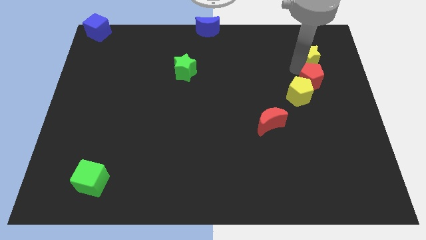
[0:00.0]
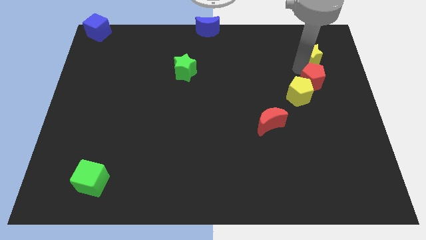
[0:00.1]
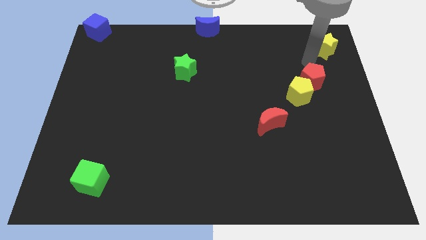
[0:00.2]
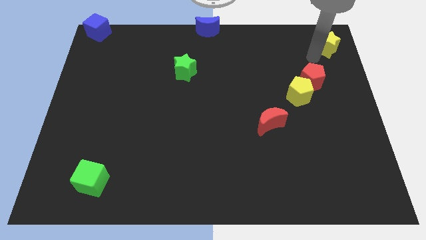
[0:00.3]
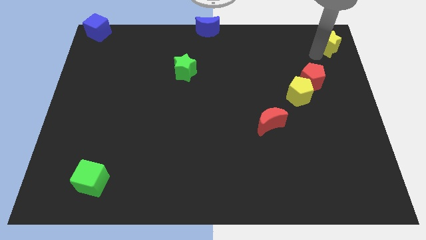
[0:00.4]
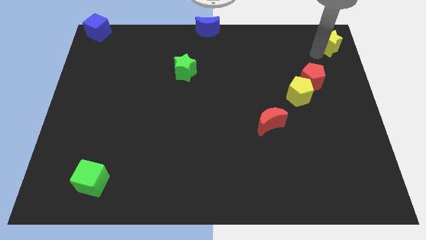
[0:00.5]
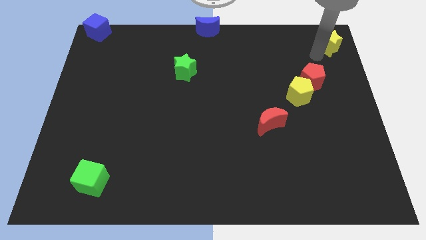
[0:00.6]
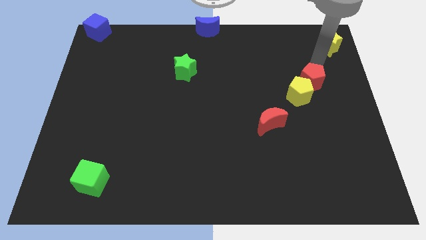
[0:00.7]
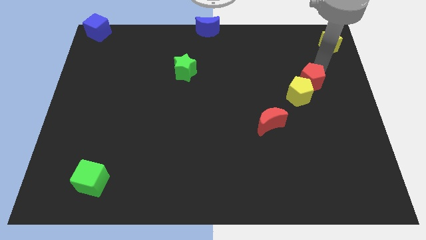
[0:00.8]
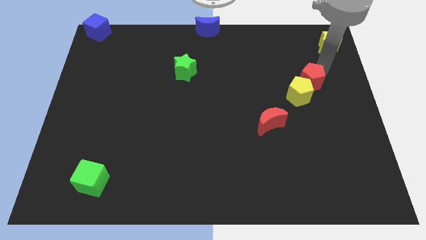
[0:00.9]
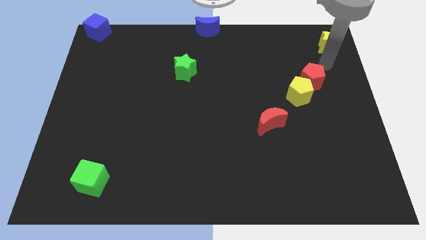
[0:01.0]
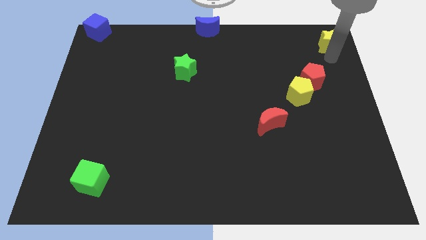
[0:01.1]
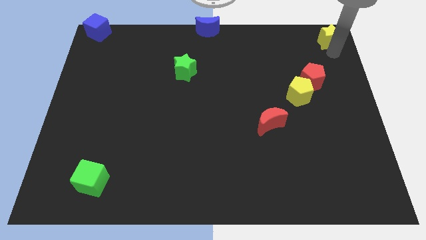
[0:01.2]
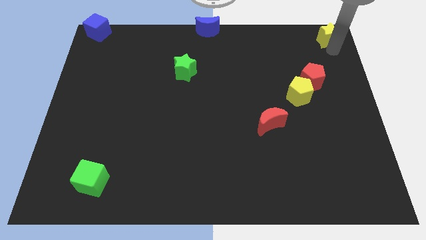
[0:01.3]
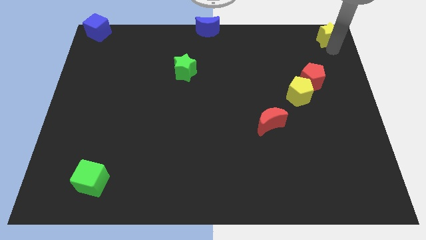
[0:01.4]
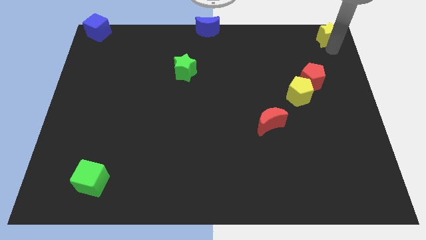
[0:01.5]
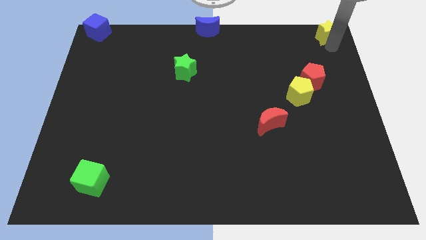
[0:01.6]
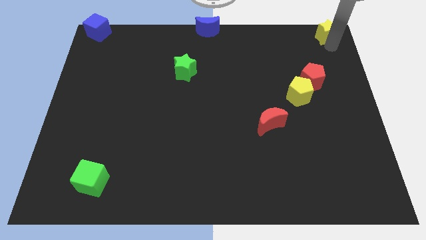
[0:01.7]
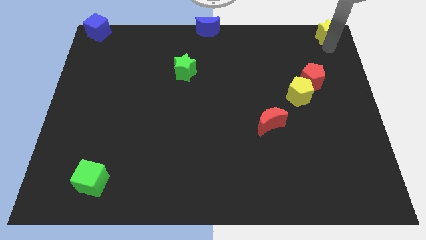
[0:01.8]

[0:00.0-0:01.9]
push the yellow star to the top right corner of the board

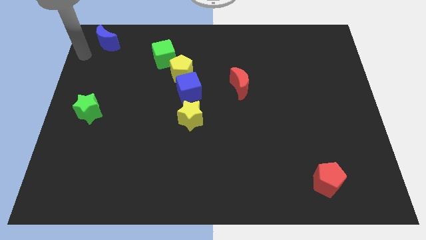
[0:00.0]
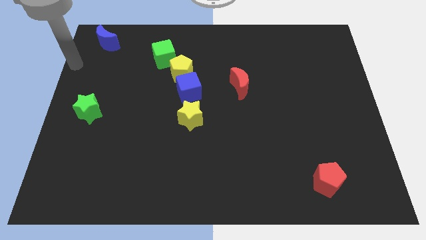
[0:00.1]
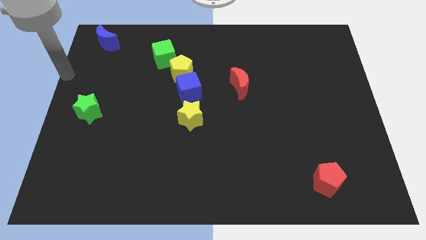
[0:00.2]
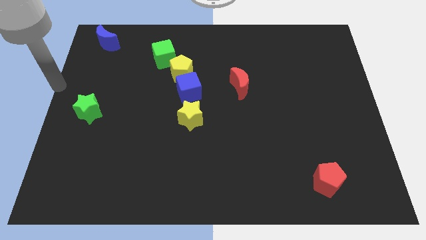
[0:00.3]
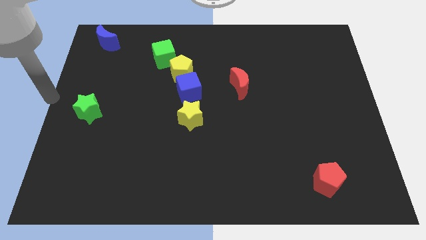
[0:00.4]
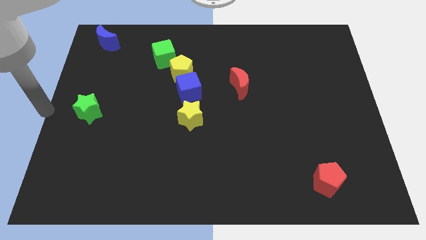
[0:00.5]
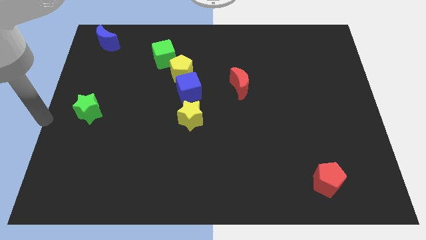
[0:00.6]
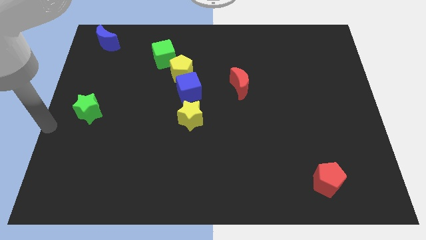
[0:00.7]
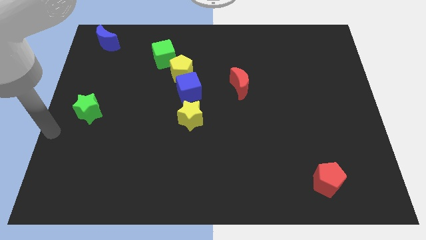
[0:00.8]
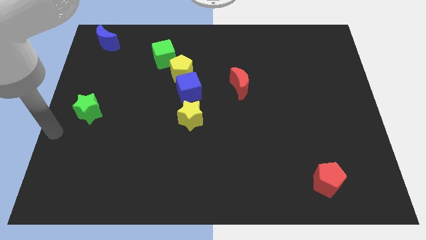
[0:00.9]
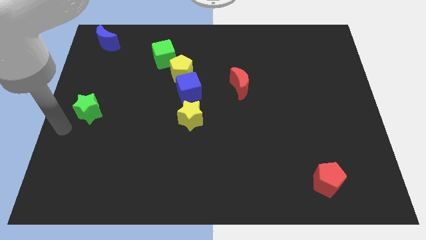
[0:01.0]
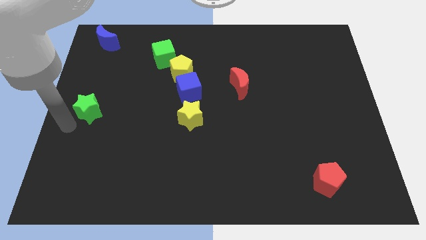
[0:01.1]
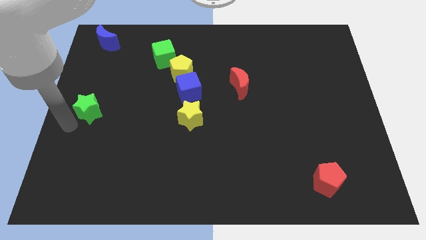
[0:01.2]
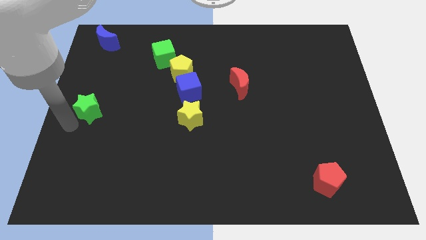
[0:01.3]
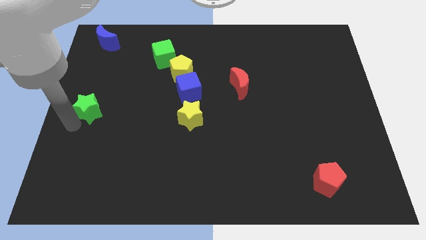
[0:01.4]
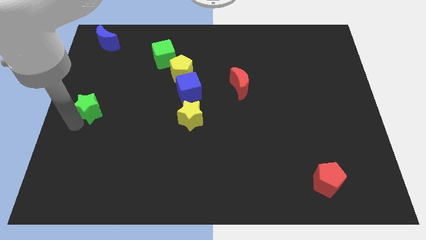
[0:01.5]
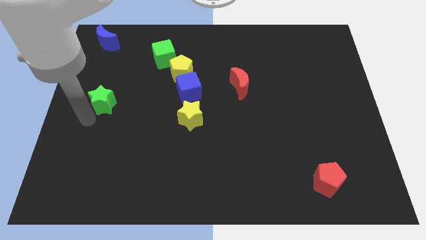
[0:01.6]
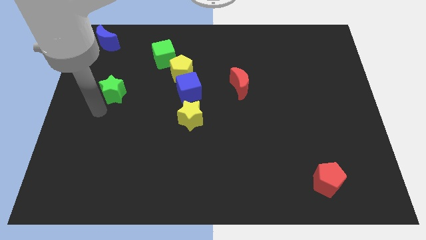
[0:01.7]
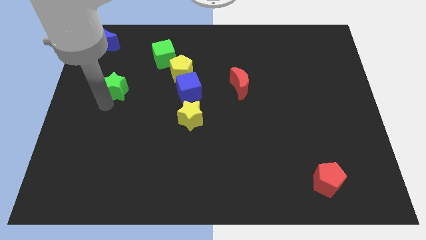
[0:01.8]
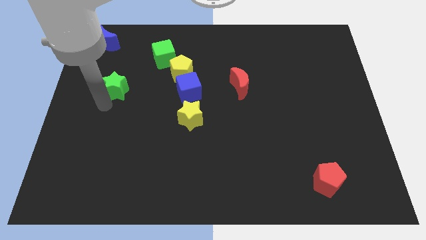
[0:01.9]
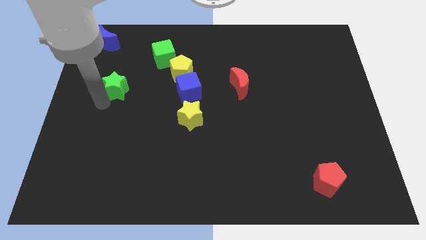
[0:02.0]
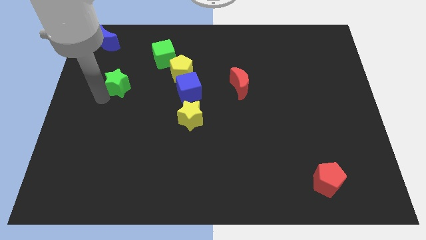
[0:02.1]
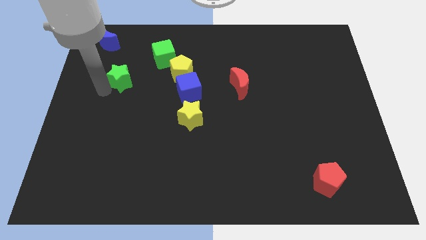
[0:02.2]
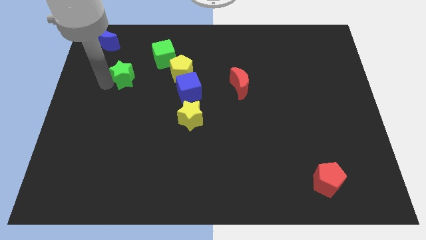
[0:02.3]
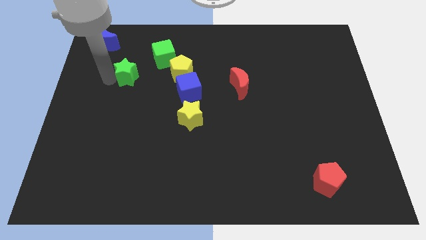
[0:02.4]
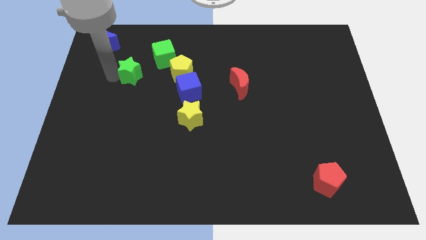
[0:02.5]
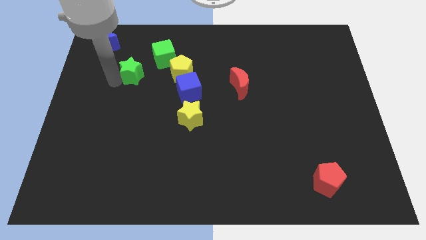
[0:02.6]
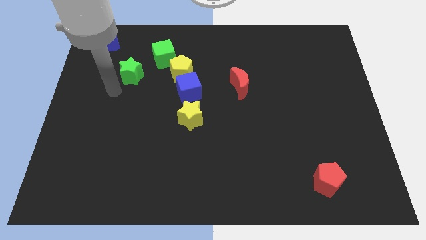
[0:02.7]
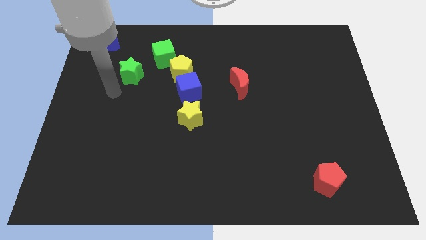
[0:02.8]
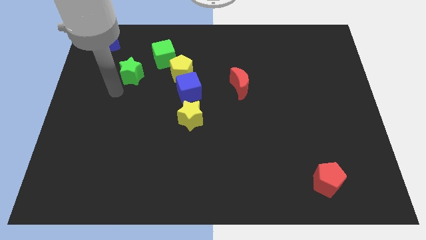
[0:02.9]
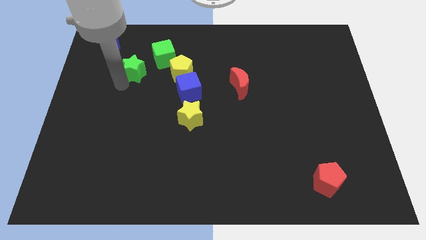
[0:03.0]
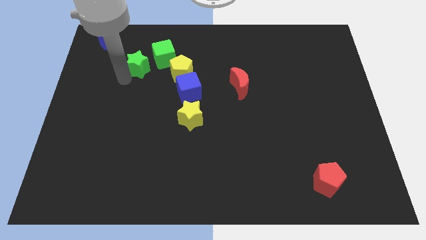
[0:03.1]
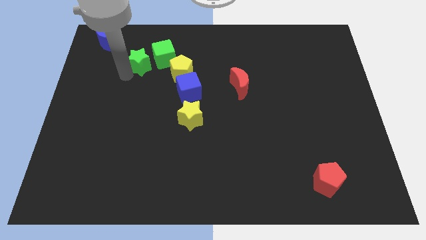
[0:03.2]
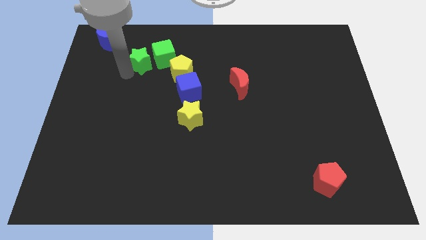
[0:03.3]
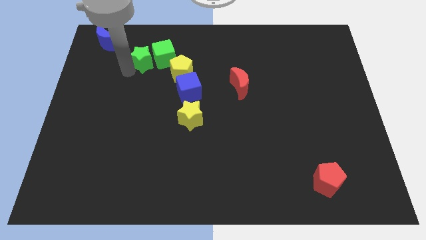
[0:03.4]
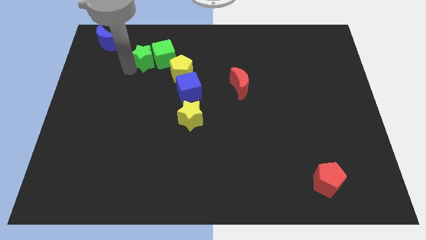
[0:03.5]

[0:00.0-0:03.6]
push green star adjacent to green cube

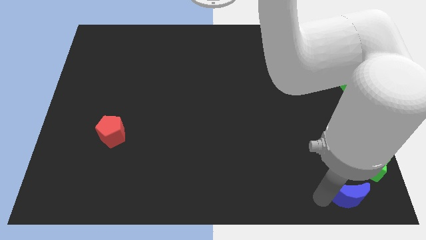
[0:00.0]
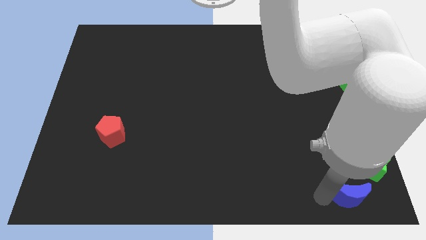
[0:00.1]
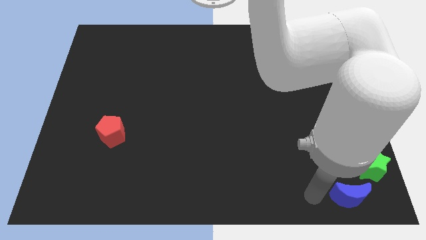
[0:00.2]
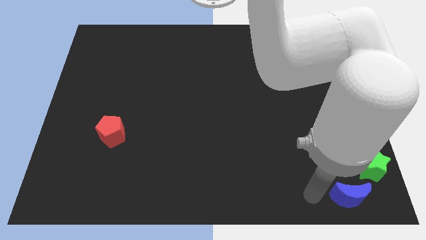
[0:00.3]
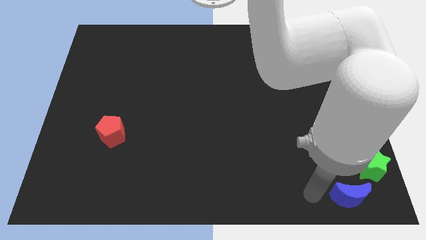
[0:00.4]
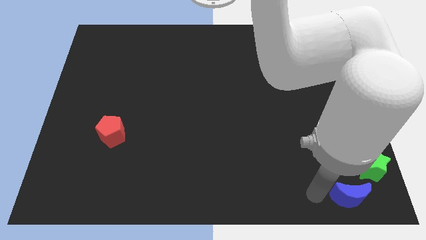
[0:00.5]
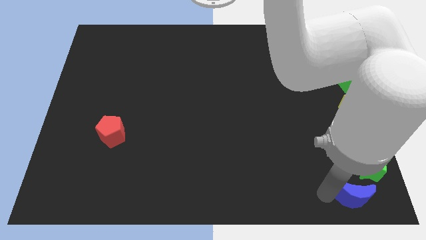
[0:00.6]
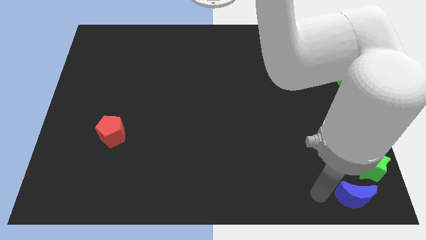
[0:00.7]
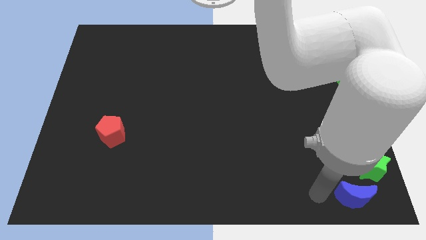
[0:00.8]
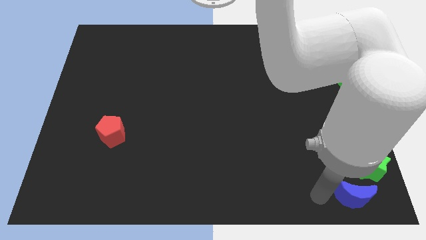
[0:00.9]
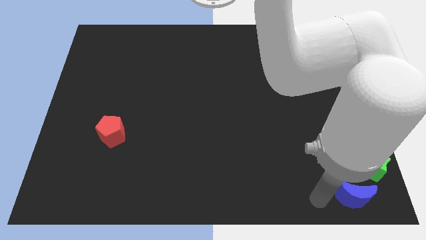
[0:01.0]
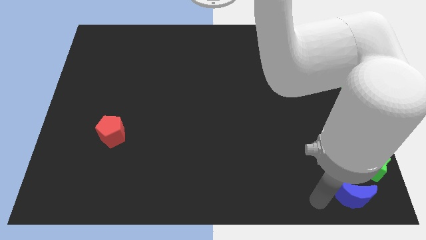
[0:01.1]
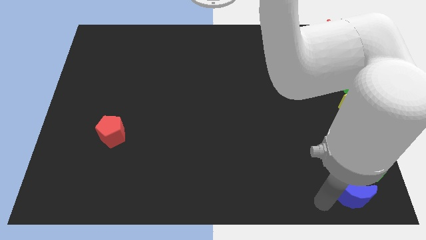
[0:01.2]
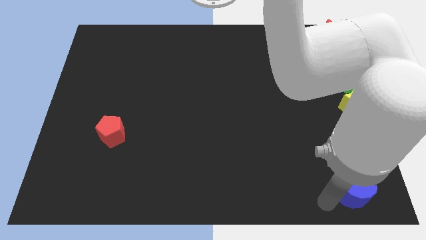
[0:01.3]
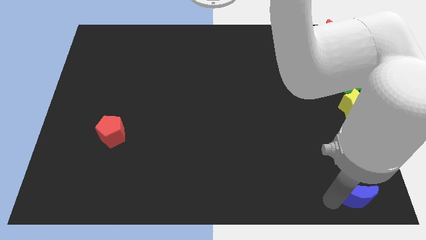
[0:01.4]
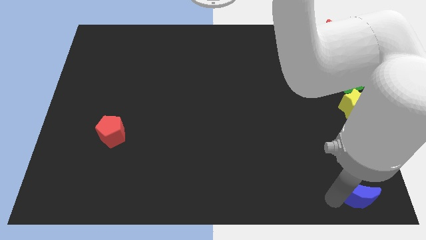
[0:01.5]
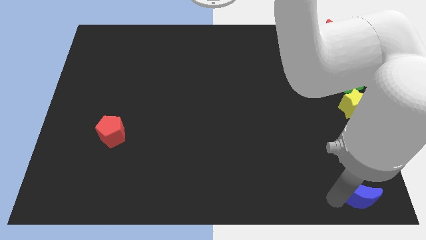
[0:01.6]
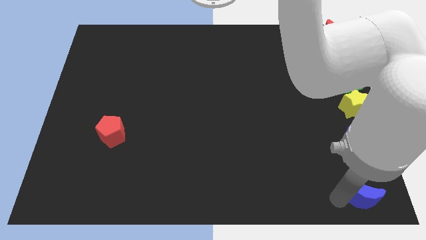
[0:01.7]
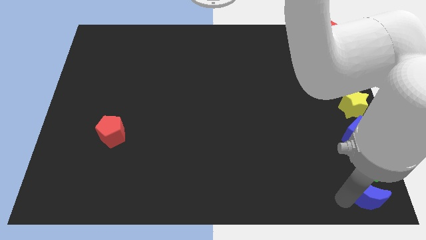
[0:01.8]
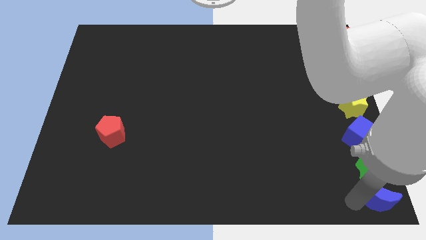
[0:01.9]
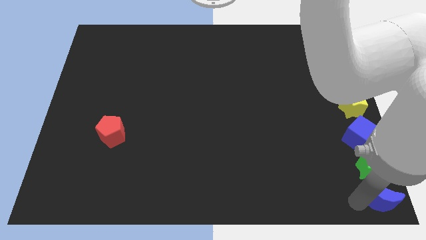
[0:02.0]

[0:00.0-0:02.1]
push blue moon to the right bottom

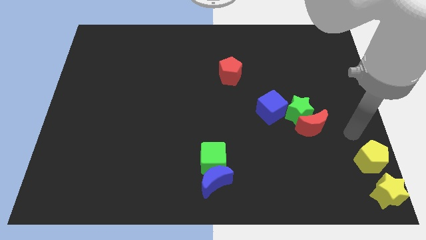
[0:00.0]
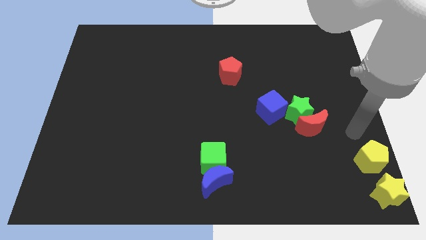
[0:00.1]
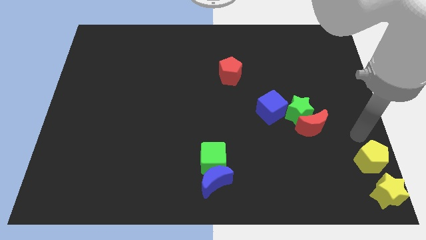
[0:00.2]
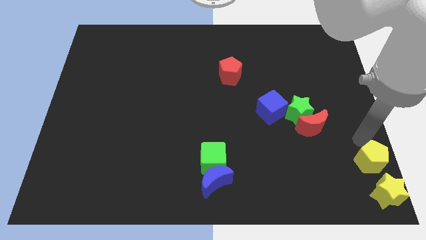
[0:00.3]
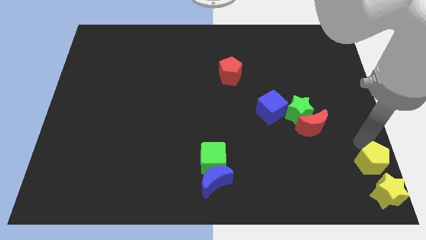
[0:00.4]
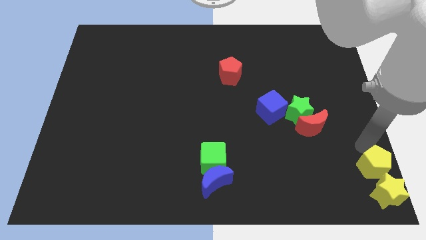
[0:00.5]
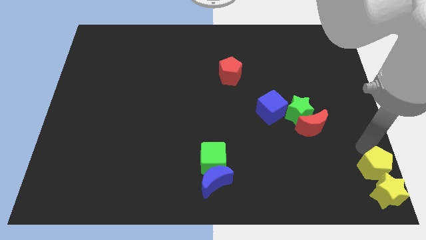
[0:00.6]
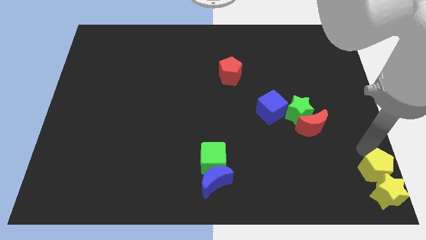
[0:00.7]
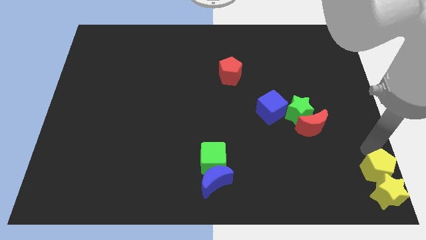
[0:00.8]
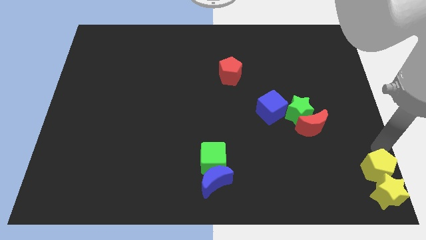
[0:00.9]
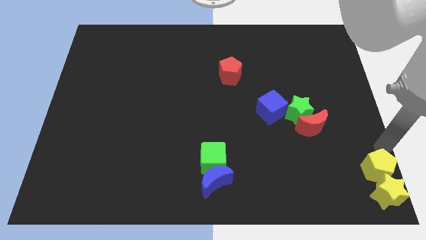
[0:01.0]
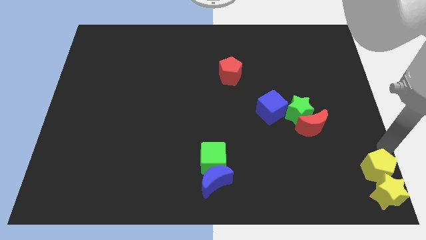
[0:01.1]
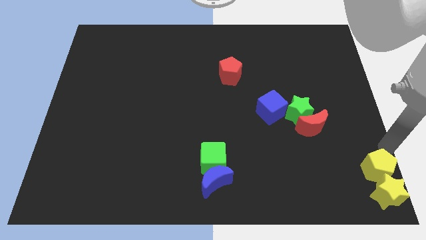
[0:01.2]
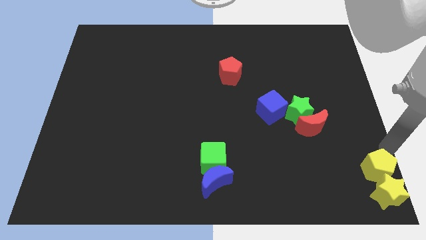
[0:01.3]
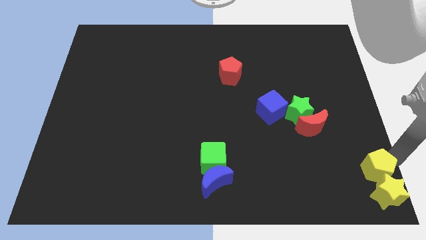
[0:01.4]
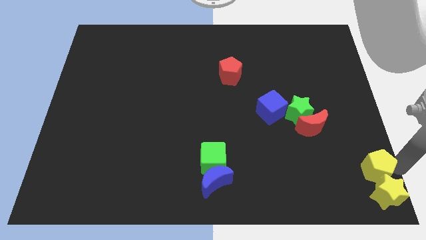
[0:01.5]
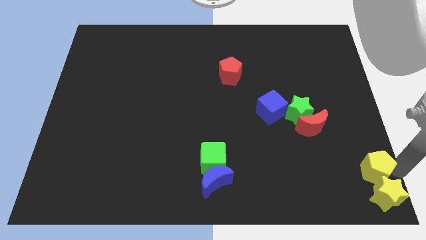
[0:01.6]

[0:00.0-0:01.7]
place the yellow pentagon above the yellow star
